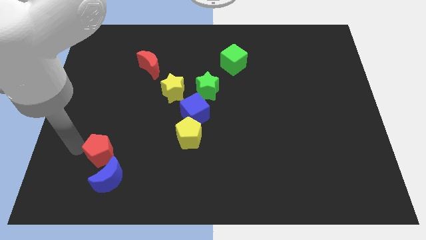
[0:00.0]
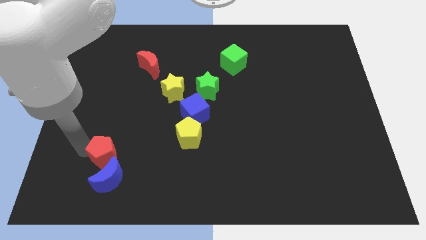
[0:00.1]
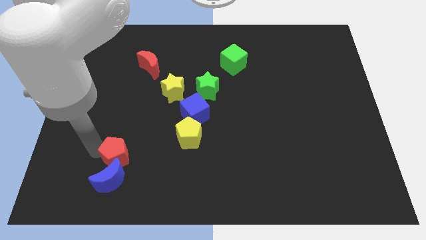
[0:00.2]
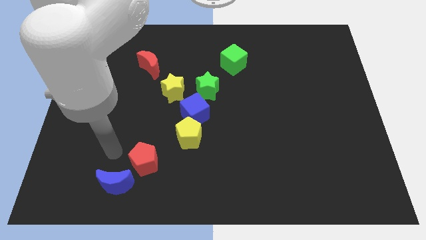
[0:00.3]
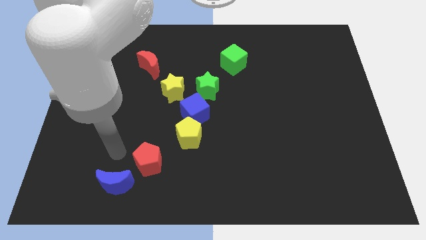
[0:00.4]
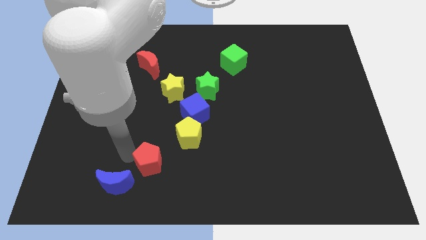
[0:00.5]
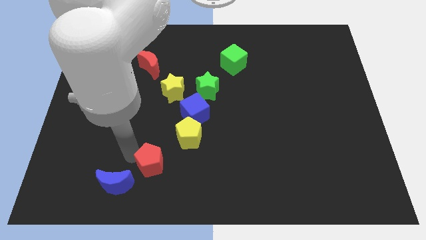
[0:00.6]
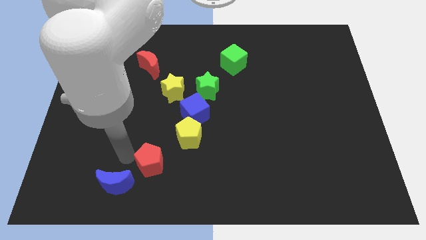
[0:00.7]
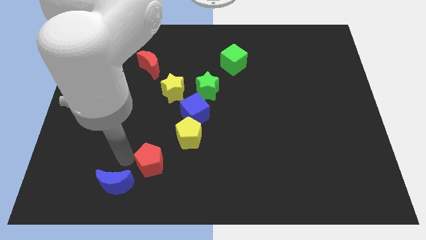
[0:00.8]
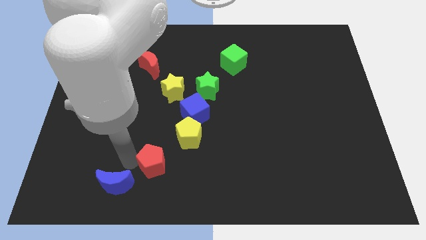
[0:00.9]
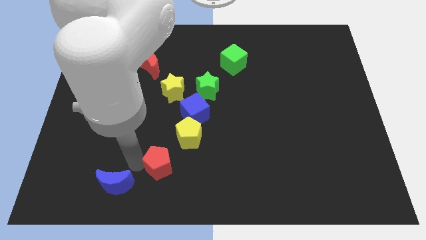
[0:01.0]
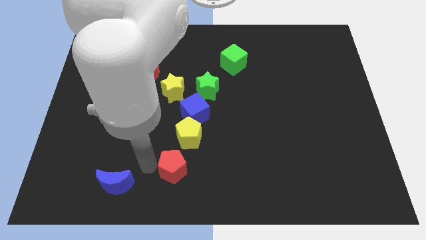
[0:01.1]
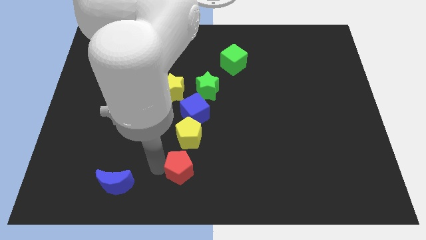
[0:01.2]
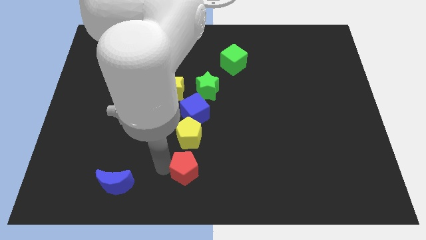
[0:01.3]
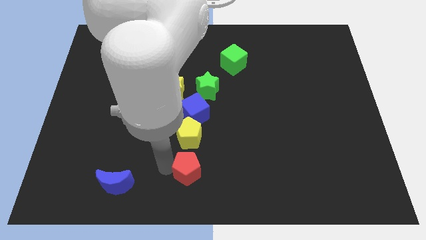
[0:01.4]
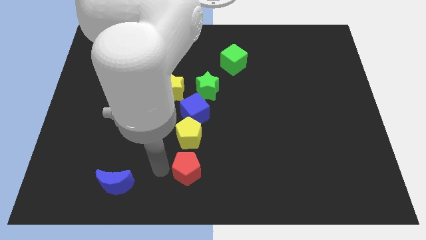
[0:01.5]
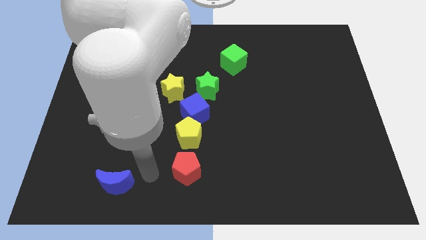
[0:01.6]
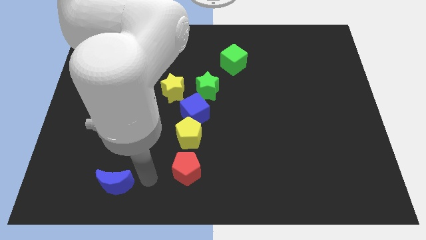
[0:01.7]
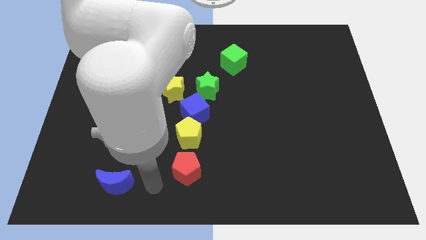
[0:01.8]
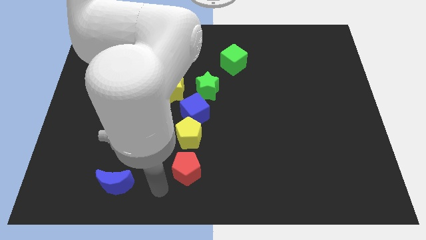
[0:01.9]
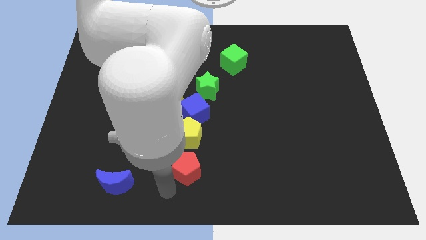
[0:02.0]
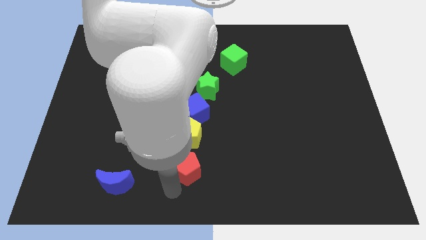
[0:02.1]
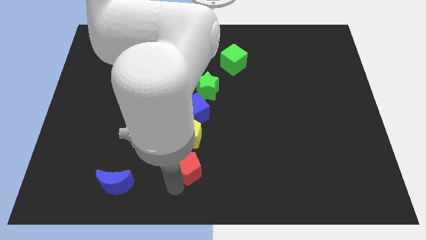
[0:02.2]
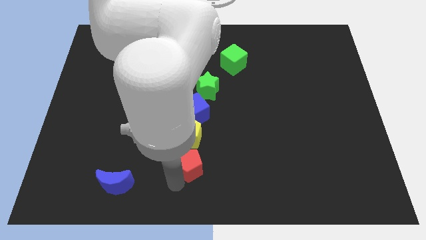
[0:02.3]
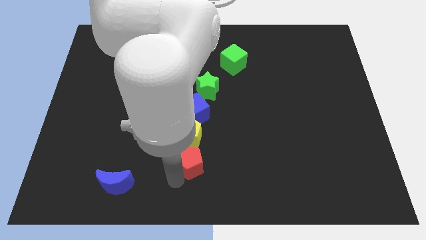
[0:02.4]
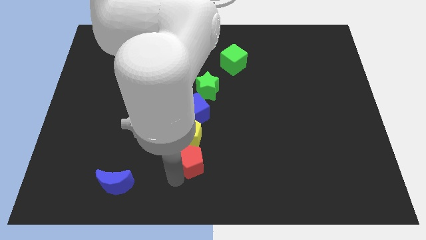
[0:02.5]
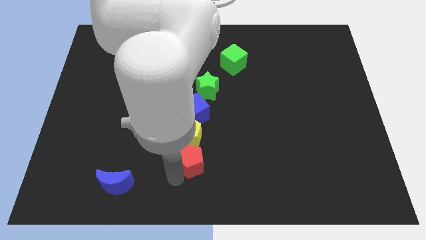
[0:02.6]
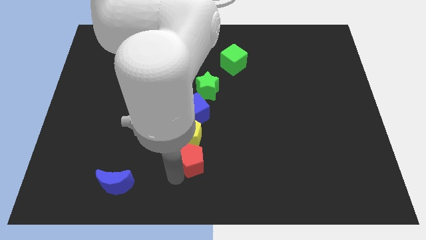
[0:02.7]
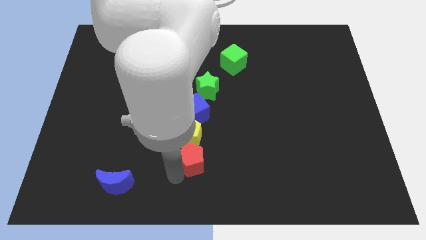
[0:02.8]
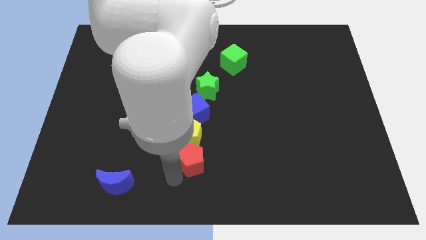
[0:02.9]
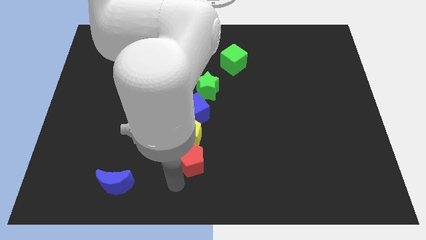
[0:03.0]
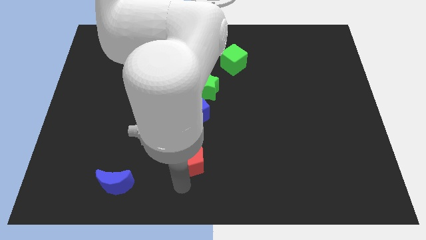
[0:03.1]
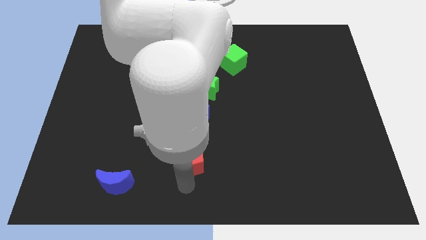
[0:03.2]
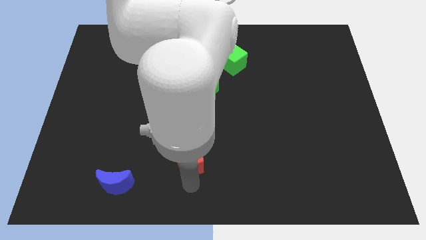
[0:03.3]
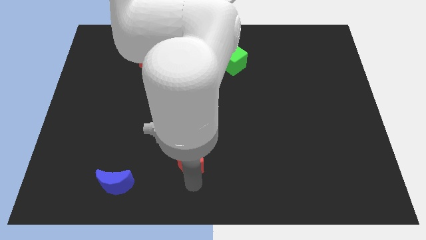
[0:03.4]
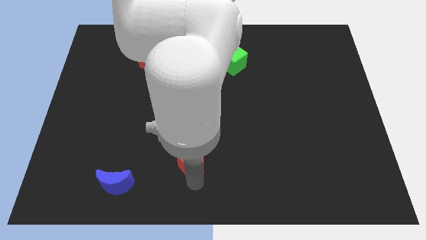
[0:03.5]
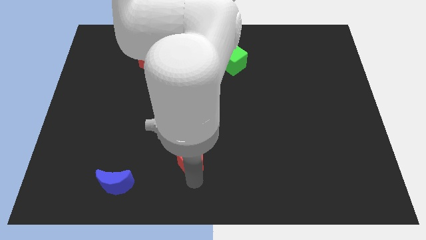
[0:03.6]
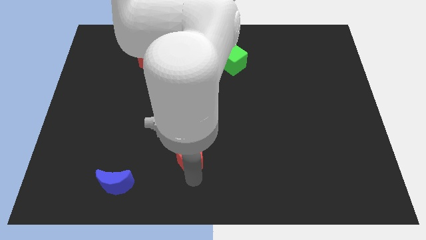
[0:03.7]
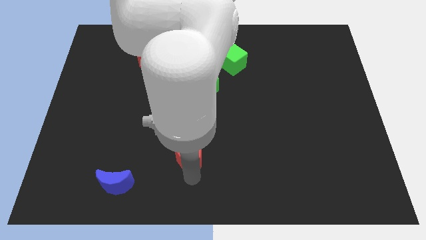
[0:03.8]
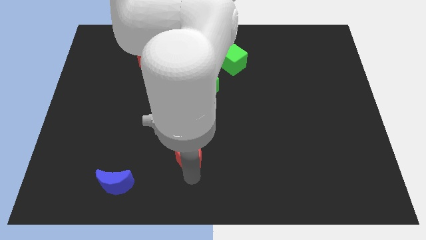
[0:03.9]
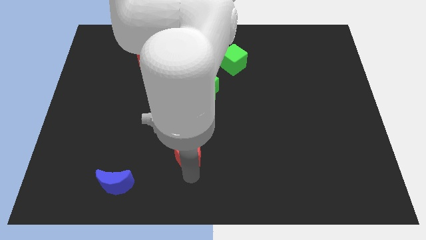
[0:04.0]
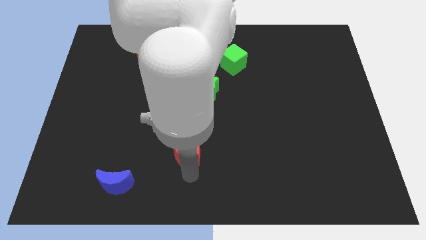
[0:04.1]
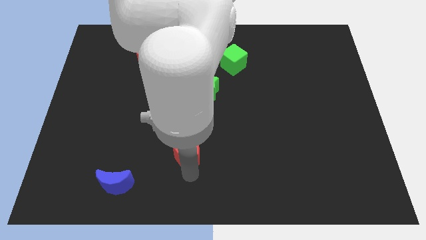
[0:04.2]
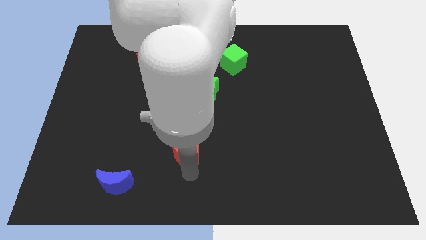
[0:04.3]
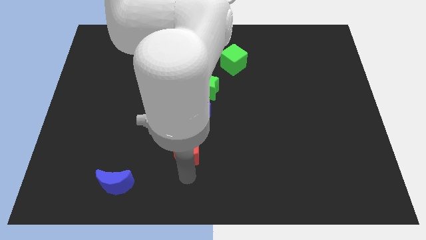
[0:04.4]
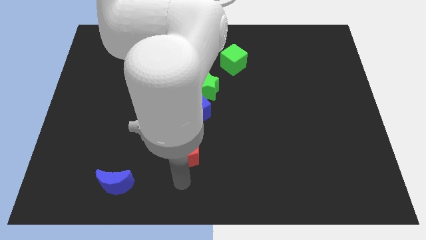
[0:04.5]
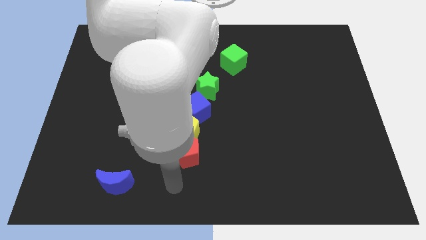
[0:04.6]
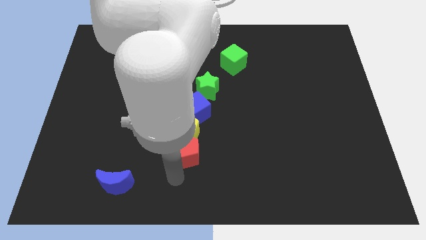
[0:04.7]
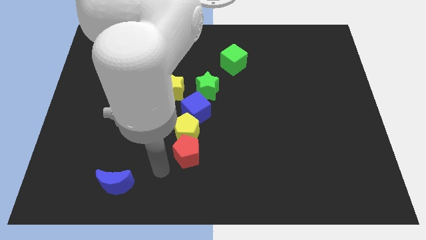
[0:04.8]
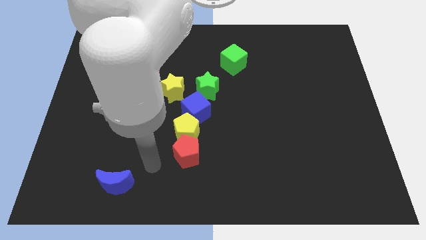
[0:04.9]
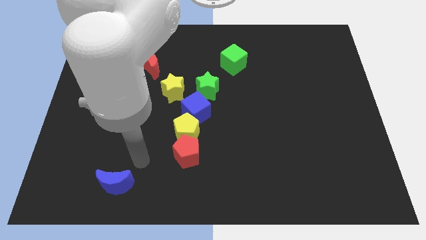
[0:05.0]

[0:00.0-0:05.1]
place the red pentagon below the yellow pentagon

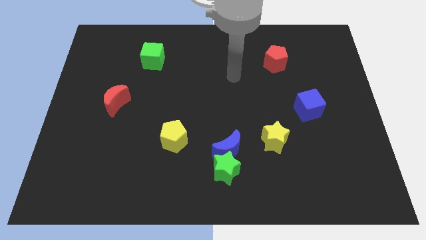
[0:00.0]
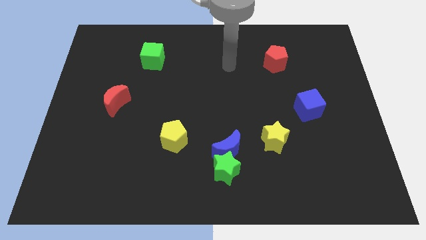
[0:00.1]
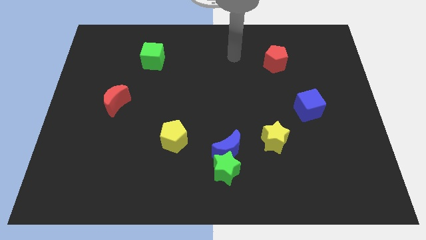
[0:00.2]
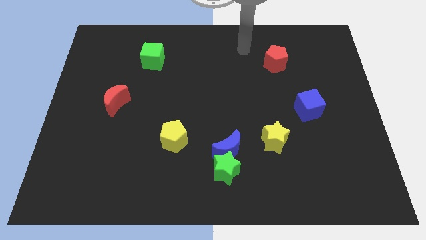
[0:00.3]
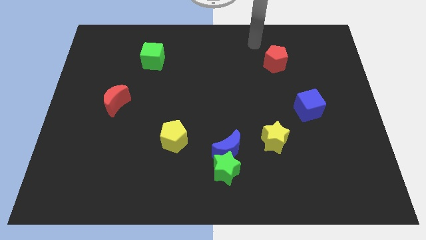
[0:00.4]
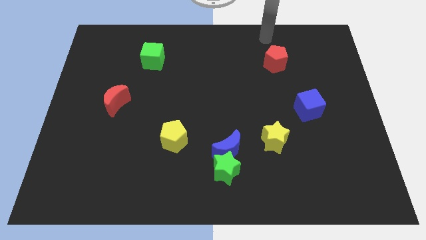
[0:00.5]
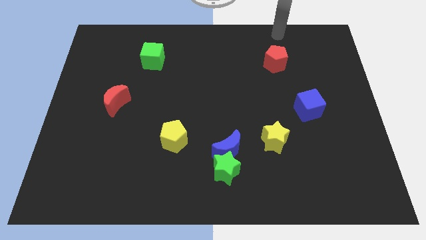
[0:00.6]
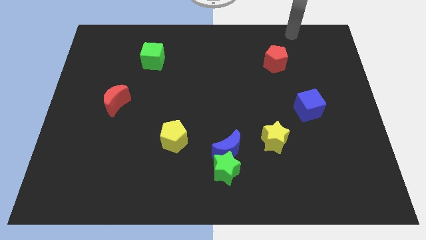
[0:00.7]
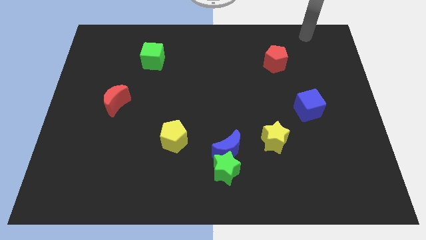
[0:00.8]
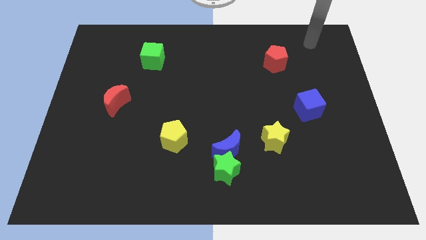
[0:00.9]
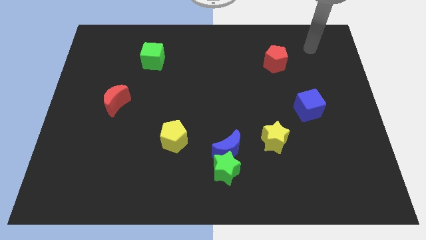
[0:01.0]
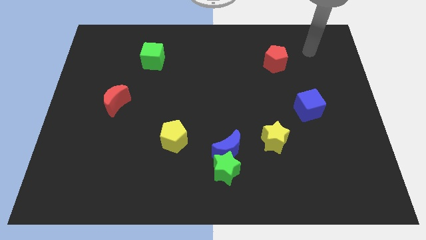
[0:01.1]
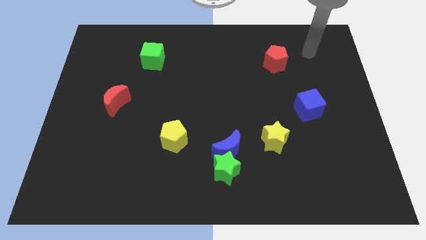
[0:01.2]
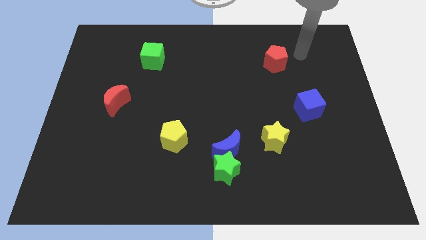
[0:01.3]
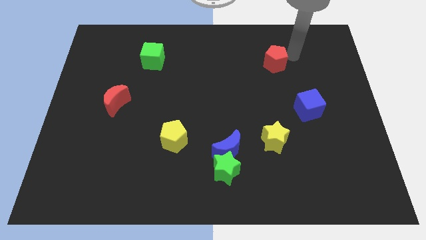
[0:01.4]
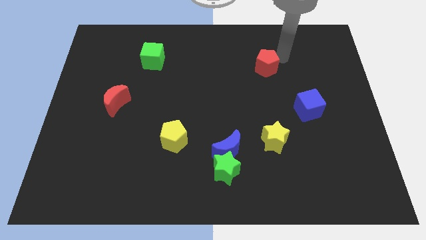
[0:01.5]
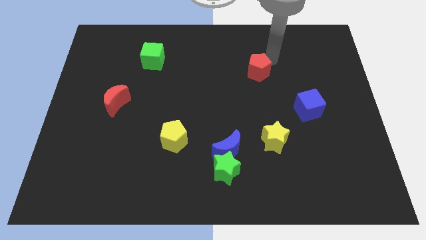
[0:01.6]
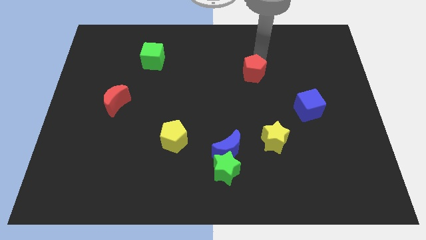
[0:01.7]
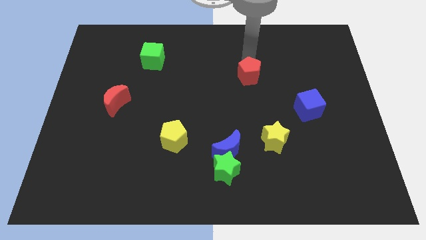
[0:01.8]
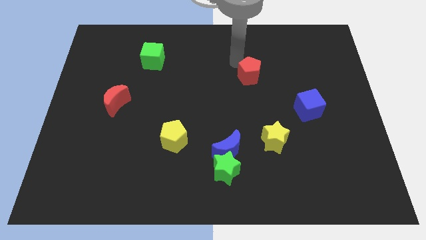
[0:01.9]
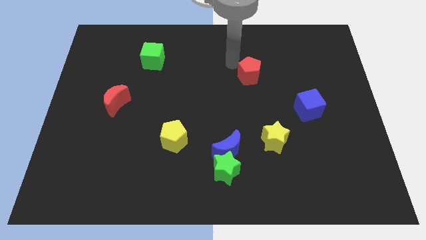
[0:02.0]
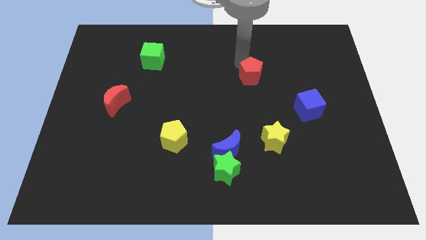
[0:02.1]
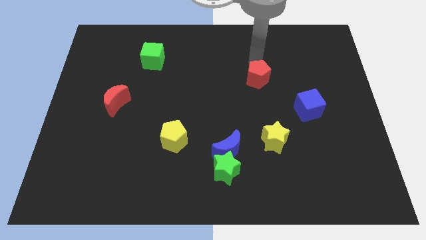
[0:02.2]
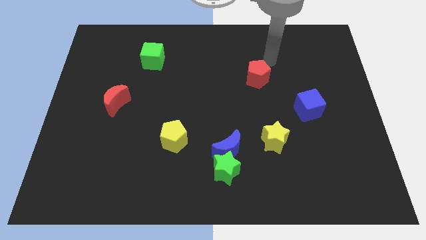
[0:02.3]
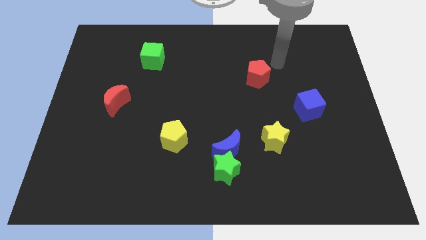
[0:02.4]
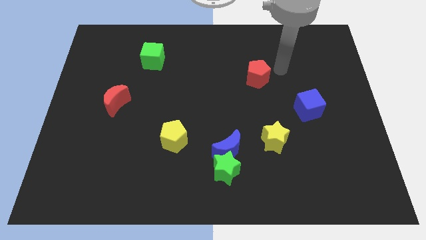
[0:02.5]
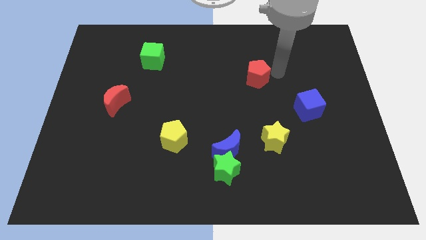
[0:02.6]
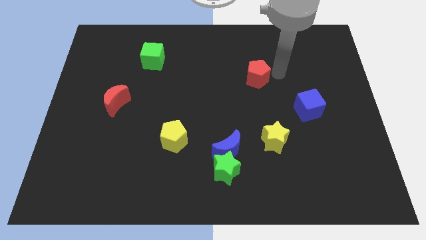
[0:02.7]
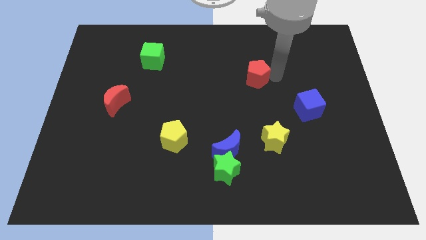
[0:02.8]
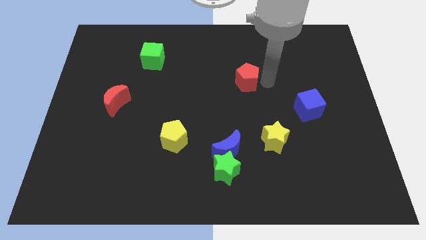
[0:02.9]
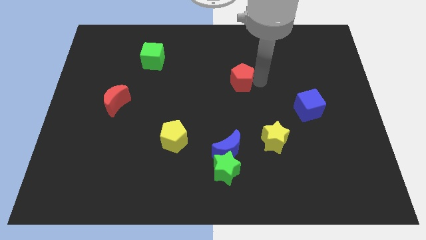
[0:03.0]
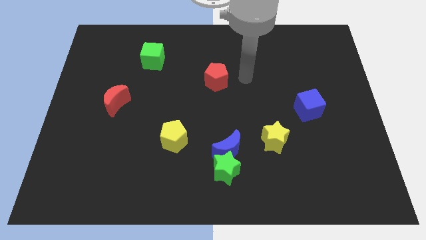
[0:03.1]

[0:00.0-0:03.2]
place the red pentagon above the blue moon

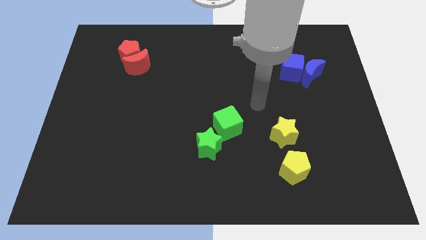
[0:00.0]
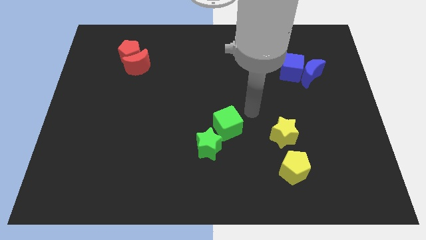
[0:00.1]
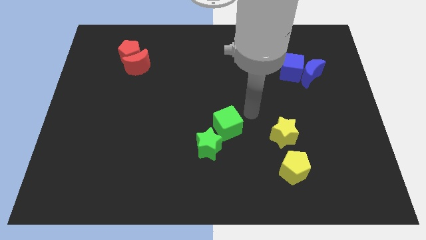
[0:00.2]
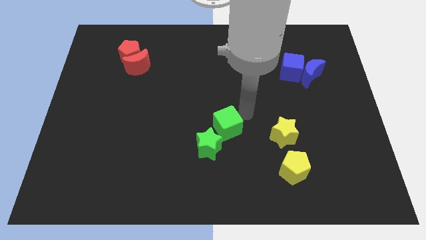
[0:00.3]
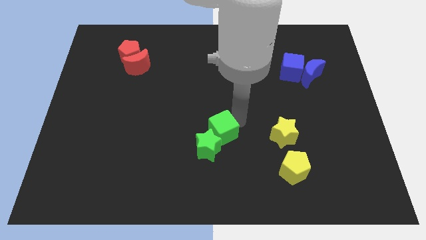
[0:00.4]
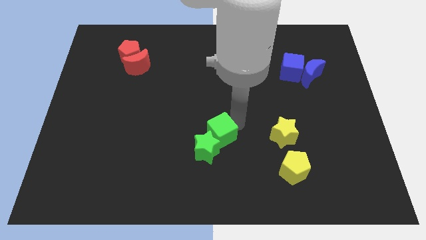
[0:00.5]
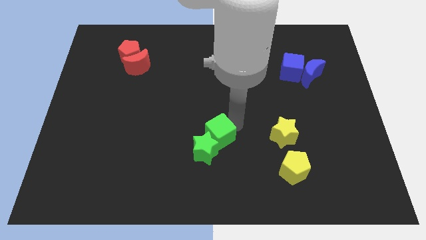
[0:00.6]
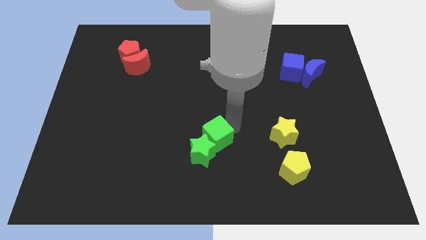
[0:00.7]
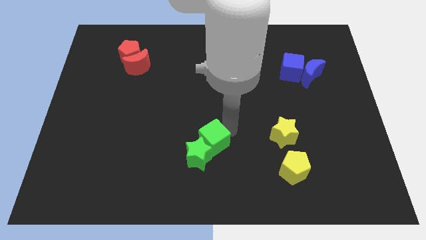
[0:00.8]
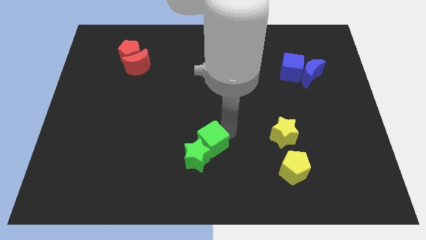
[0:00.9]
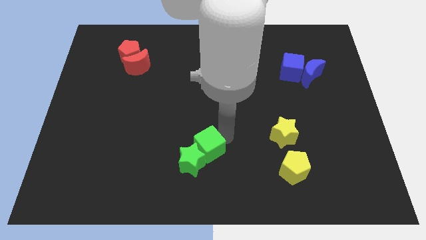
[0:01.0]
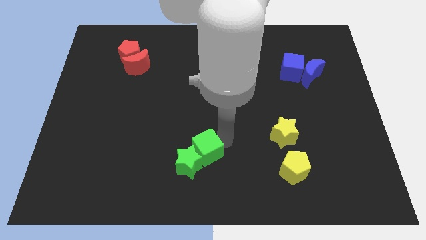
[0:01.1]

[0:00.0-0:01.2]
push the green cube and green star downward
